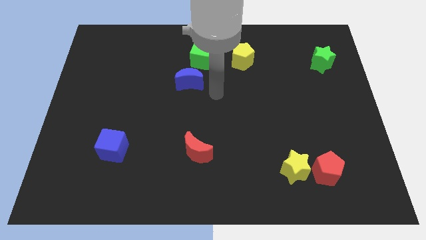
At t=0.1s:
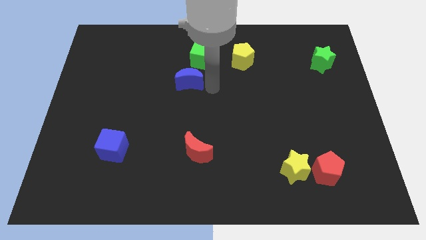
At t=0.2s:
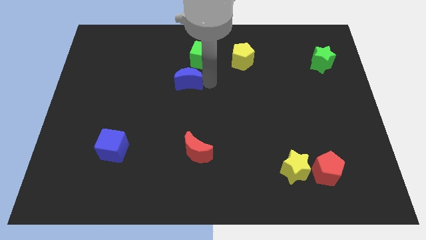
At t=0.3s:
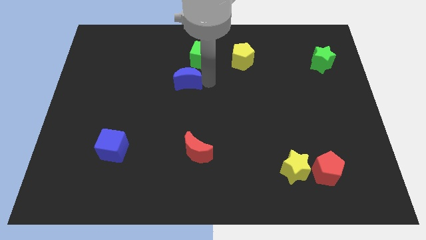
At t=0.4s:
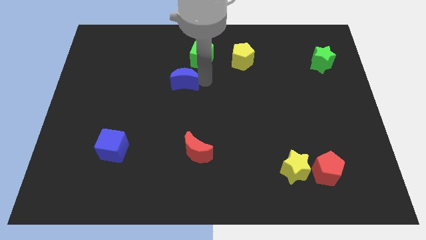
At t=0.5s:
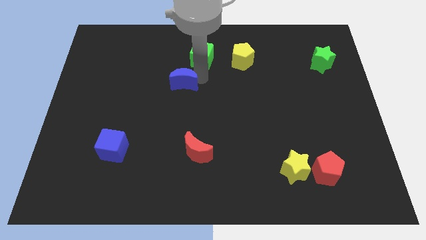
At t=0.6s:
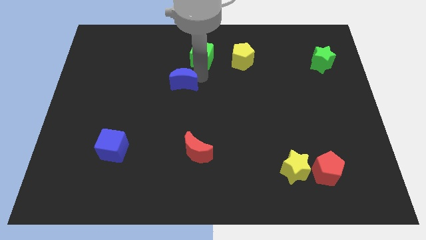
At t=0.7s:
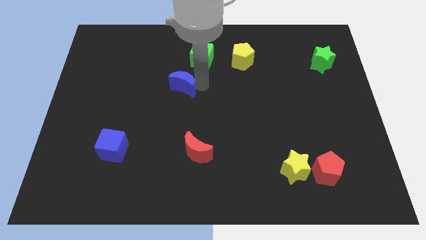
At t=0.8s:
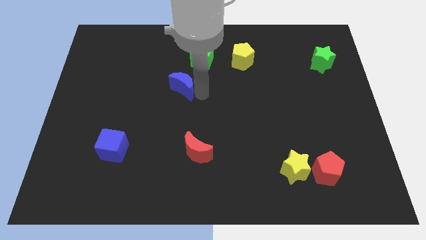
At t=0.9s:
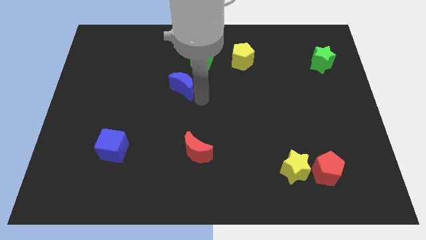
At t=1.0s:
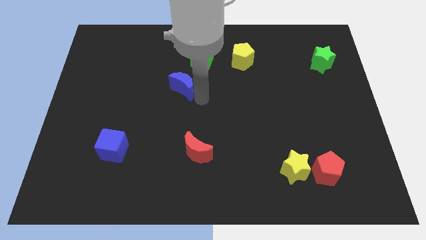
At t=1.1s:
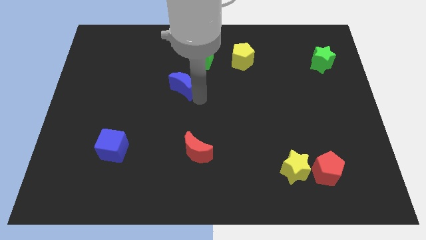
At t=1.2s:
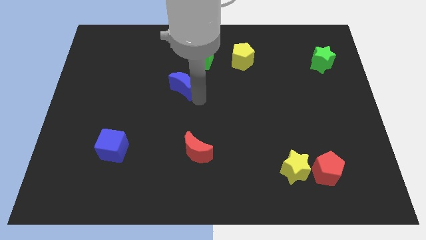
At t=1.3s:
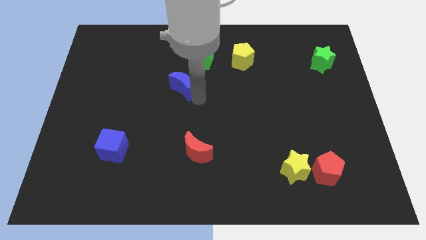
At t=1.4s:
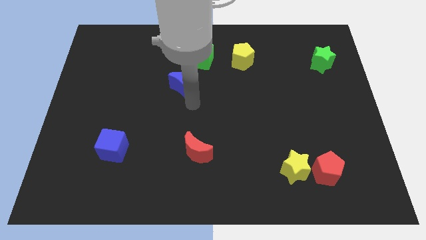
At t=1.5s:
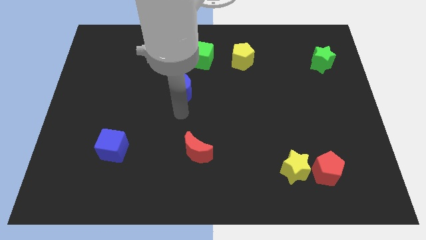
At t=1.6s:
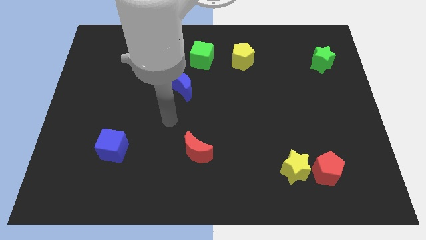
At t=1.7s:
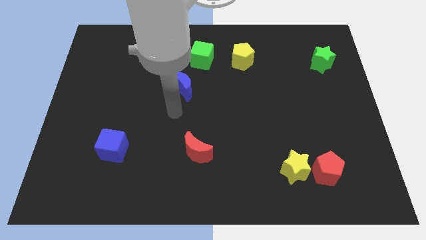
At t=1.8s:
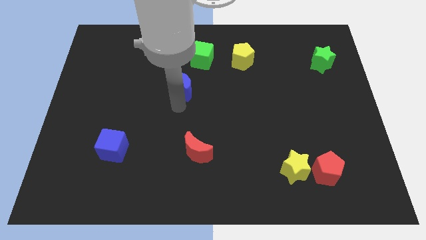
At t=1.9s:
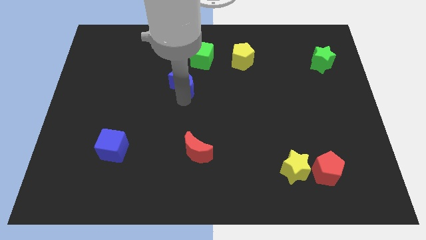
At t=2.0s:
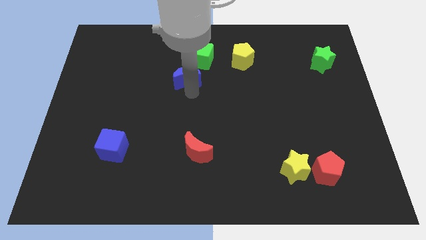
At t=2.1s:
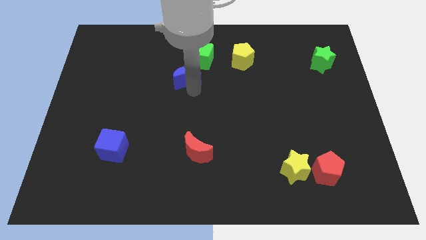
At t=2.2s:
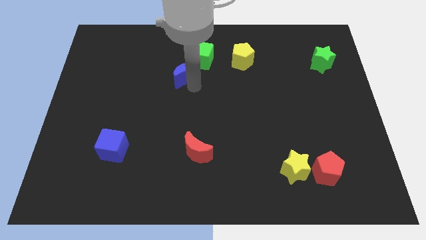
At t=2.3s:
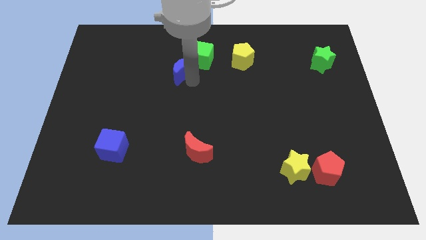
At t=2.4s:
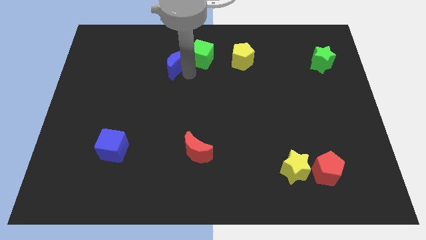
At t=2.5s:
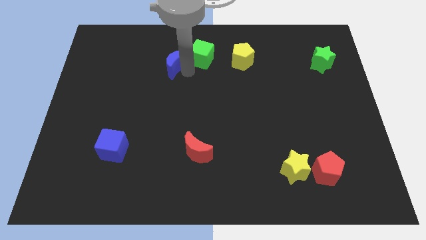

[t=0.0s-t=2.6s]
push the blue moon into green cube

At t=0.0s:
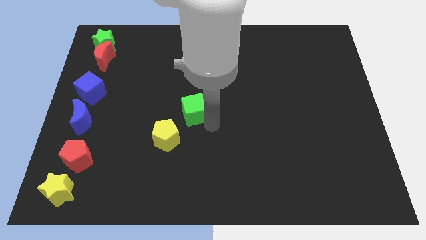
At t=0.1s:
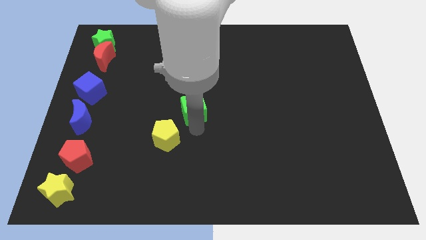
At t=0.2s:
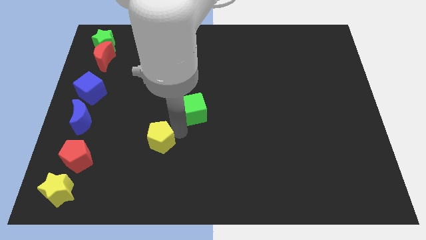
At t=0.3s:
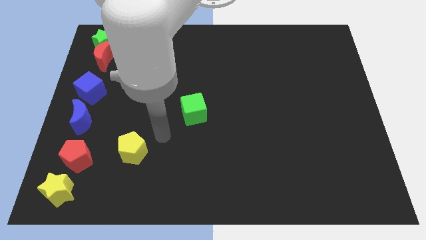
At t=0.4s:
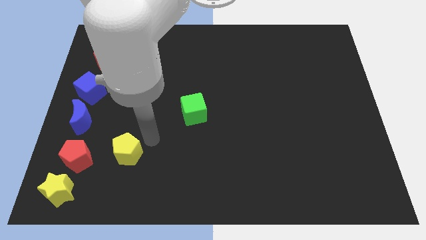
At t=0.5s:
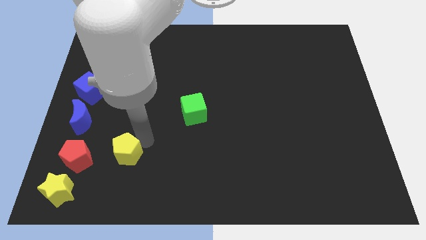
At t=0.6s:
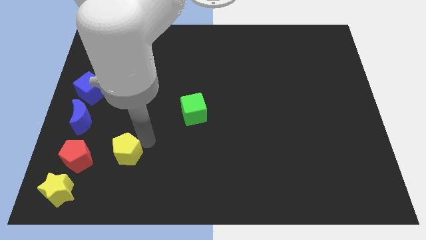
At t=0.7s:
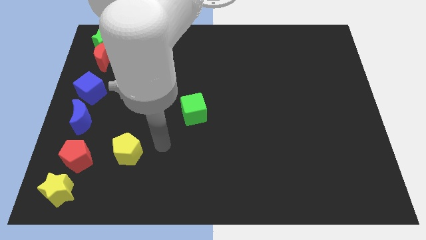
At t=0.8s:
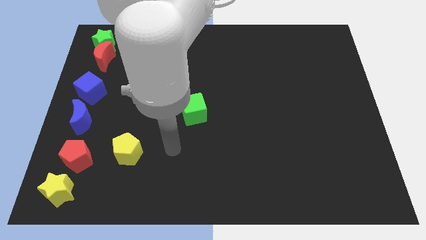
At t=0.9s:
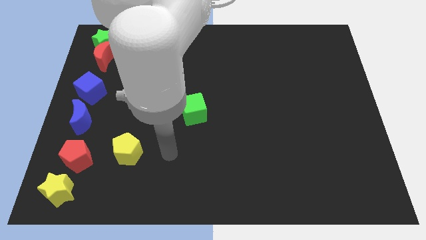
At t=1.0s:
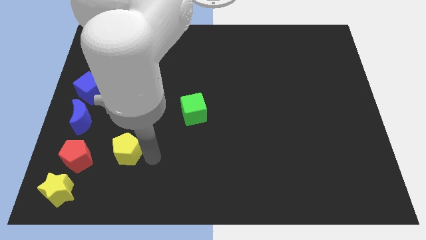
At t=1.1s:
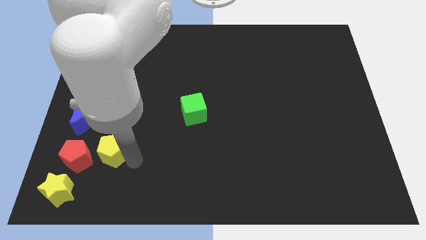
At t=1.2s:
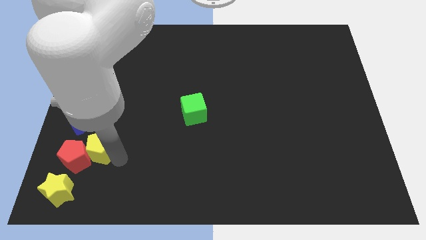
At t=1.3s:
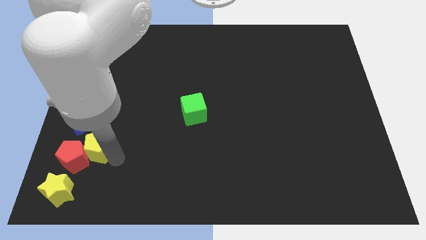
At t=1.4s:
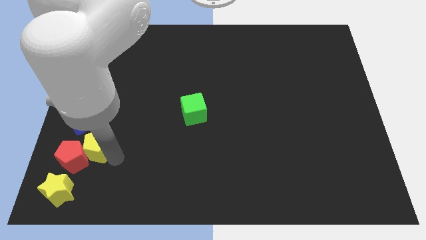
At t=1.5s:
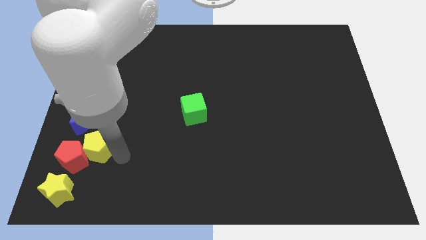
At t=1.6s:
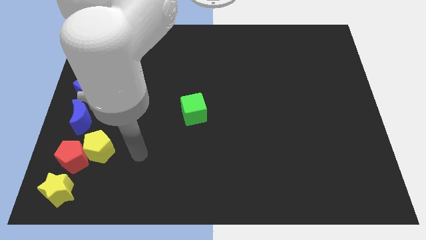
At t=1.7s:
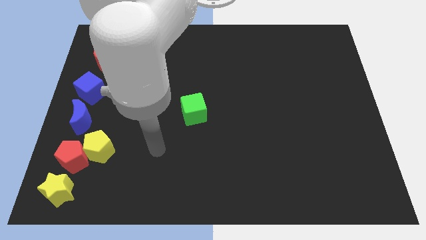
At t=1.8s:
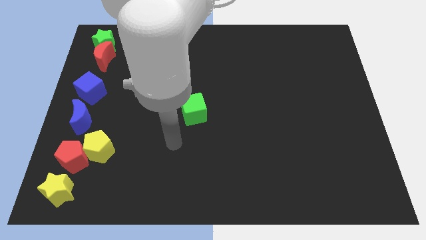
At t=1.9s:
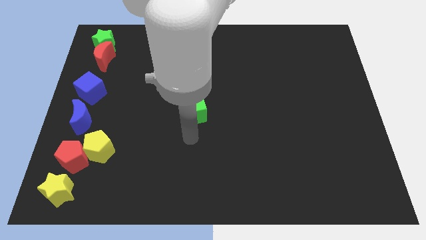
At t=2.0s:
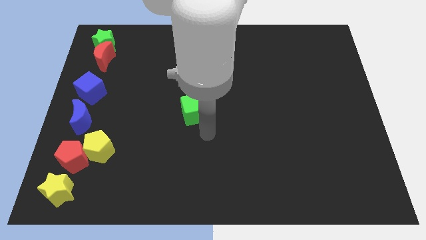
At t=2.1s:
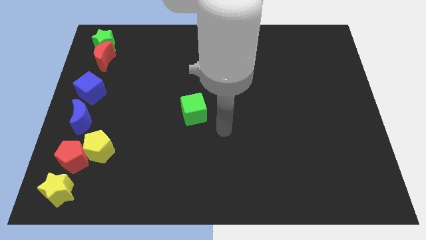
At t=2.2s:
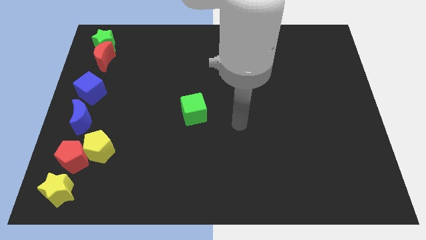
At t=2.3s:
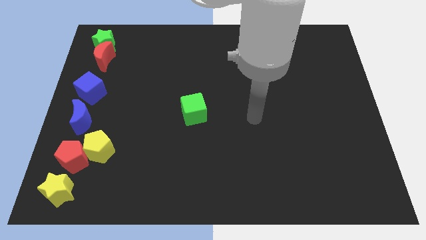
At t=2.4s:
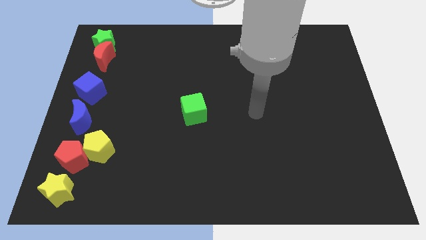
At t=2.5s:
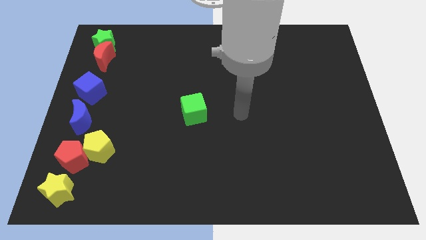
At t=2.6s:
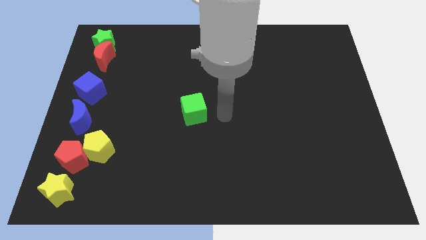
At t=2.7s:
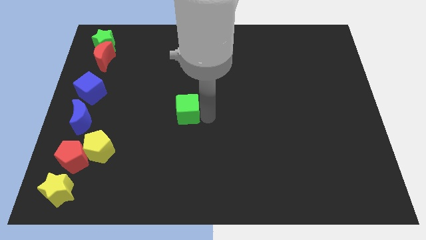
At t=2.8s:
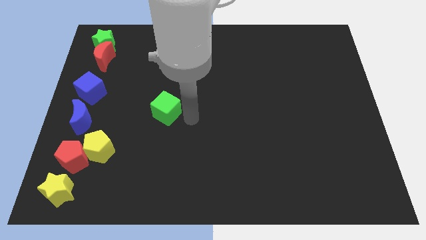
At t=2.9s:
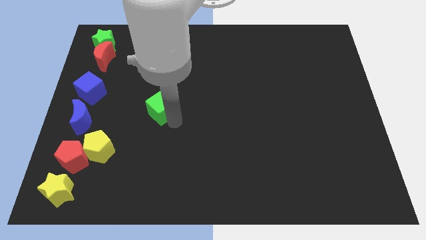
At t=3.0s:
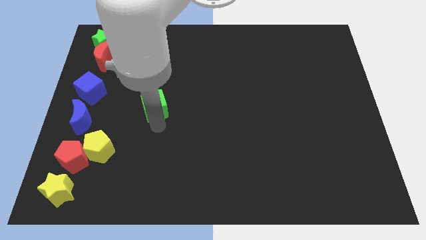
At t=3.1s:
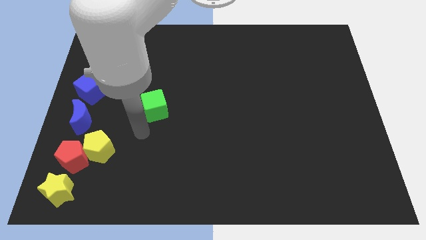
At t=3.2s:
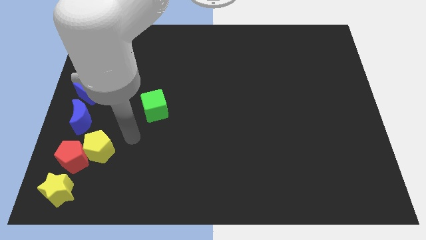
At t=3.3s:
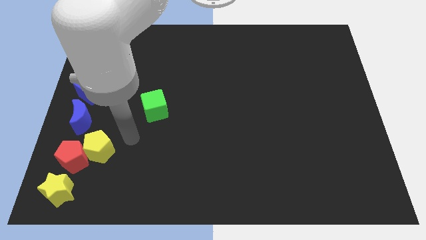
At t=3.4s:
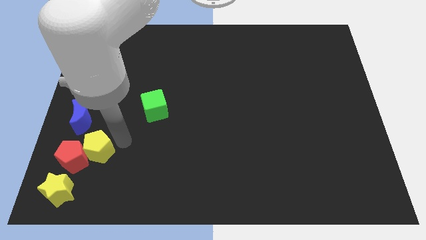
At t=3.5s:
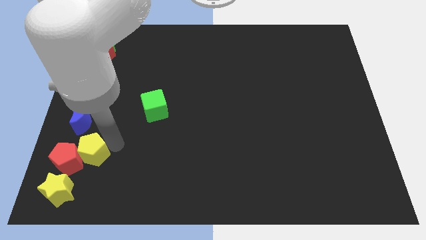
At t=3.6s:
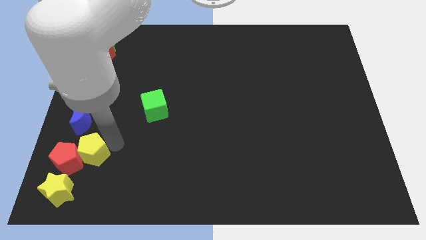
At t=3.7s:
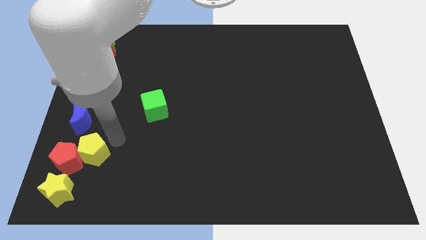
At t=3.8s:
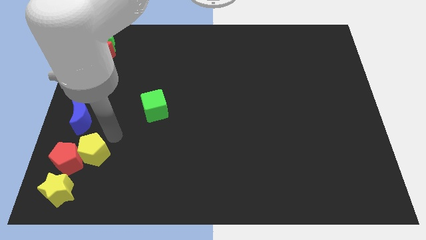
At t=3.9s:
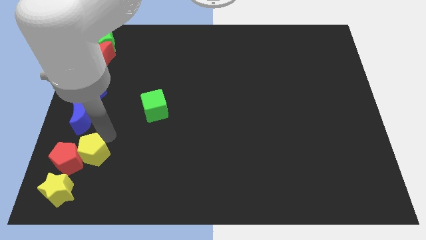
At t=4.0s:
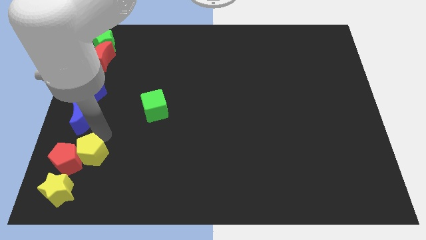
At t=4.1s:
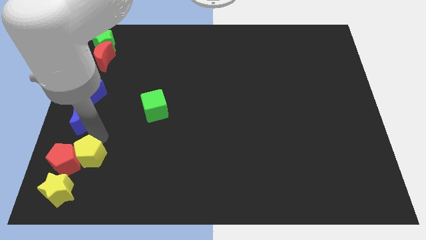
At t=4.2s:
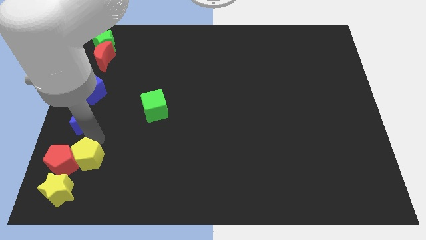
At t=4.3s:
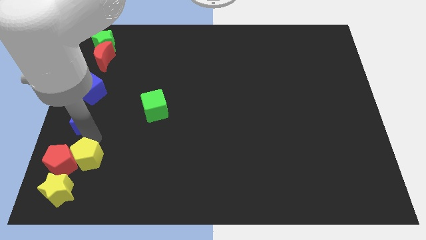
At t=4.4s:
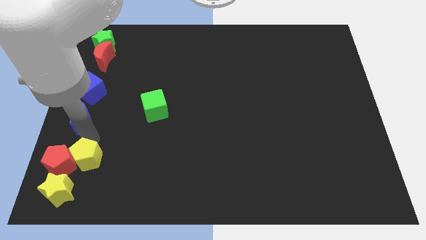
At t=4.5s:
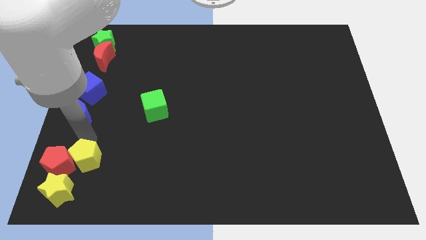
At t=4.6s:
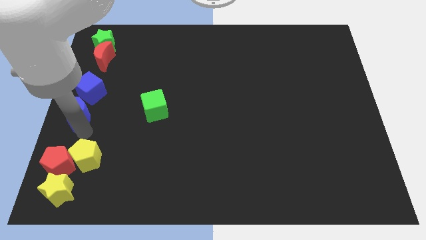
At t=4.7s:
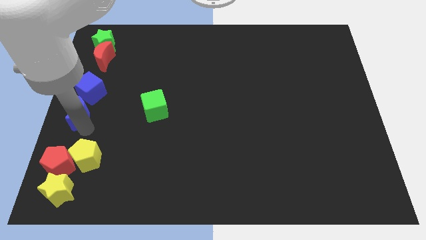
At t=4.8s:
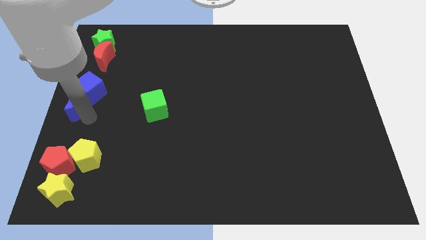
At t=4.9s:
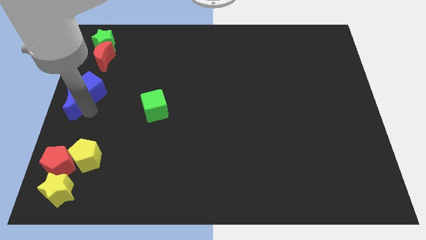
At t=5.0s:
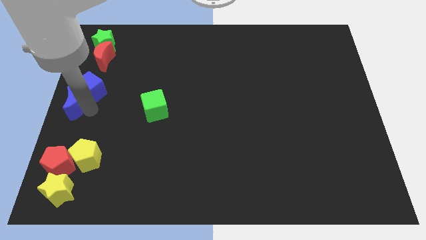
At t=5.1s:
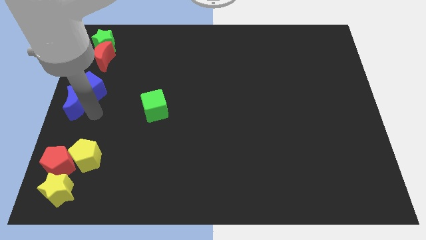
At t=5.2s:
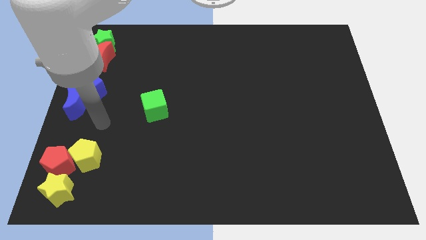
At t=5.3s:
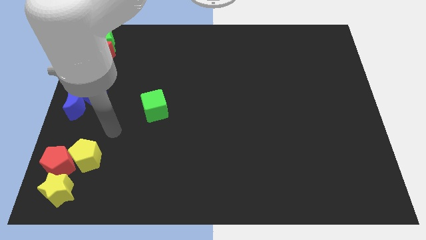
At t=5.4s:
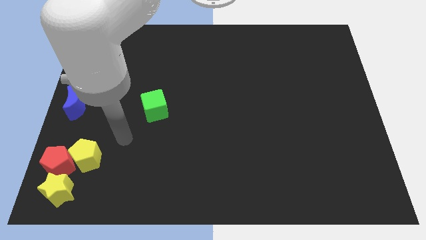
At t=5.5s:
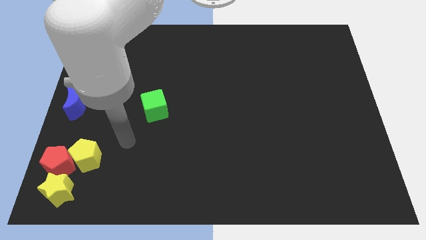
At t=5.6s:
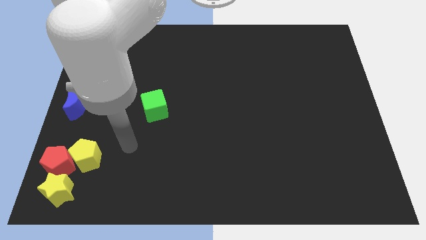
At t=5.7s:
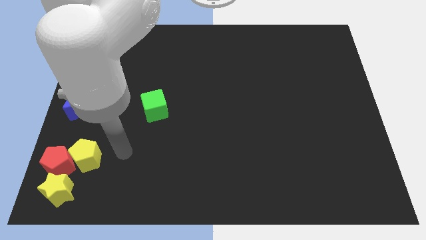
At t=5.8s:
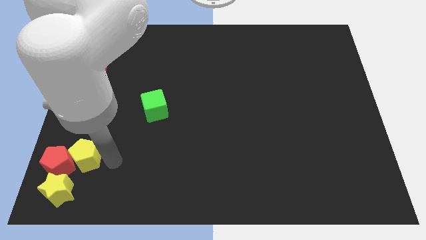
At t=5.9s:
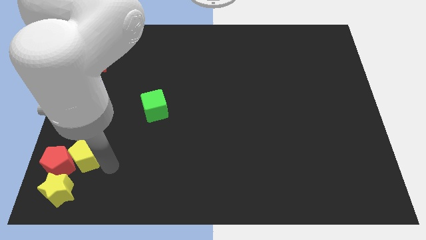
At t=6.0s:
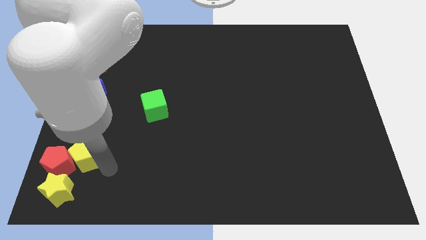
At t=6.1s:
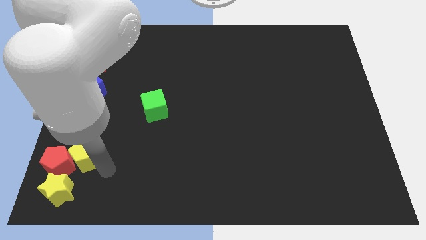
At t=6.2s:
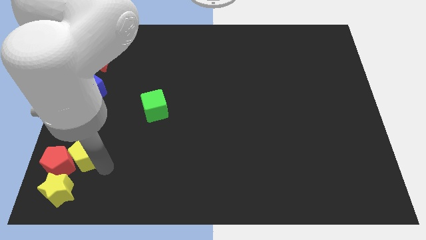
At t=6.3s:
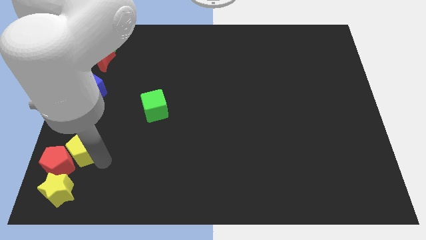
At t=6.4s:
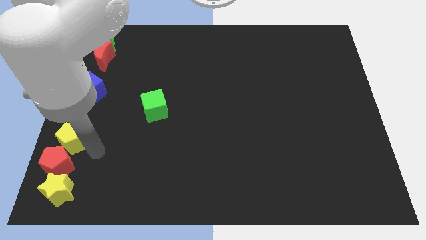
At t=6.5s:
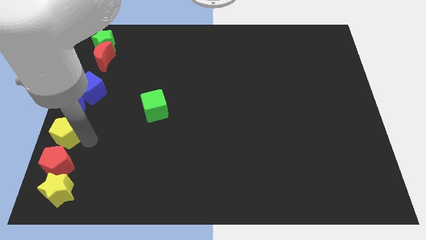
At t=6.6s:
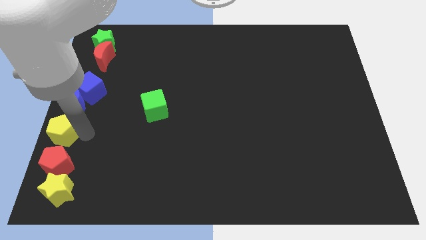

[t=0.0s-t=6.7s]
place the yellow pentagon in between blue moon and red pentagon
